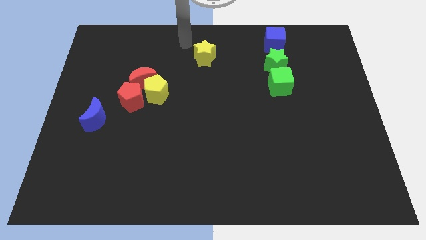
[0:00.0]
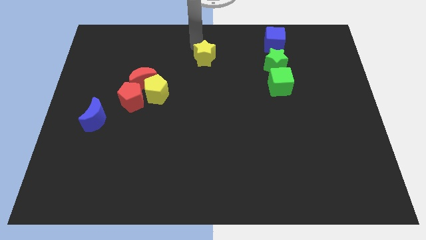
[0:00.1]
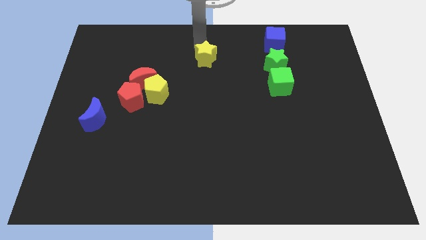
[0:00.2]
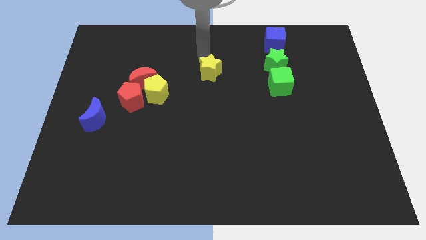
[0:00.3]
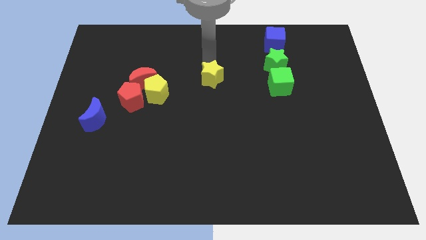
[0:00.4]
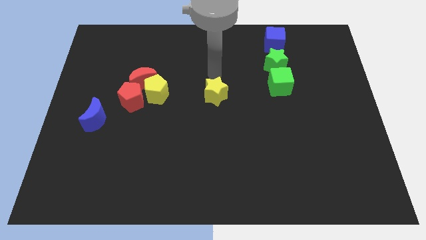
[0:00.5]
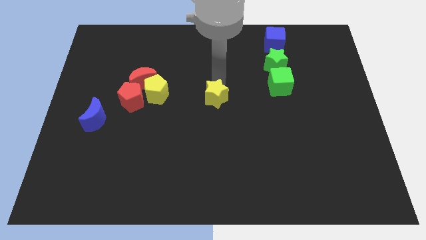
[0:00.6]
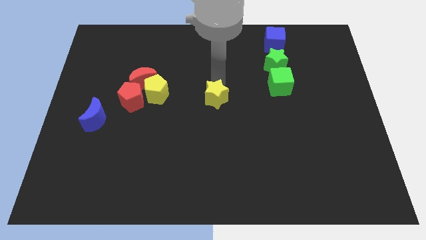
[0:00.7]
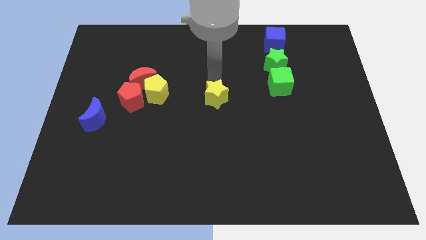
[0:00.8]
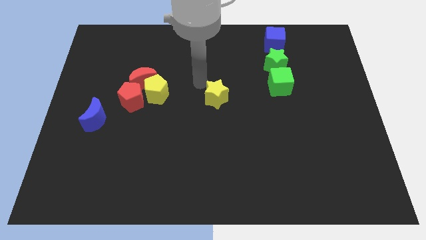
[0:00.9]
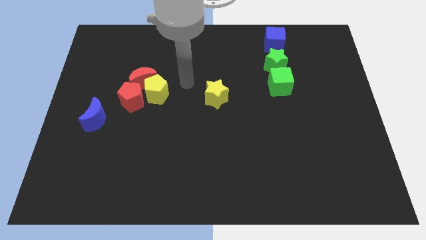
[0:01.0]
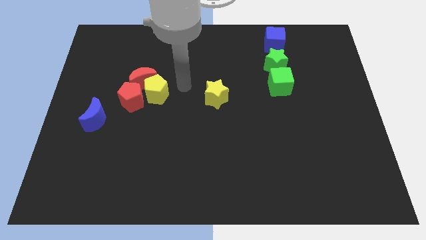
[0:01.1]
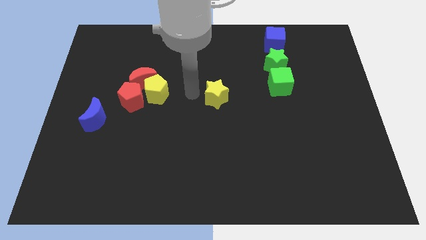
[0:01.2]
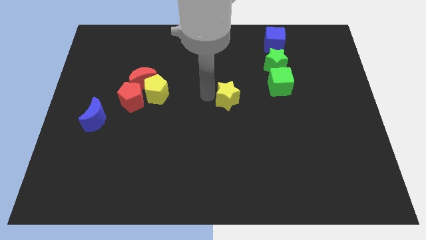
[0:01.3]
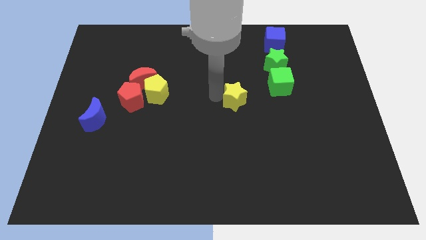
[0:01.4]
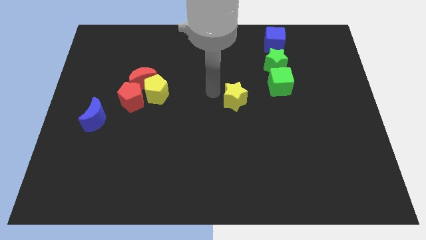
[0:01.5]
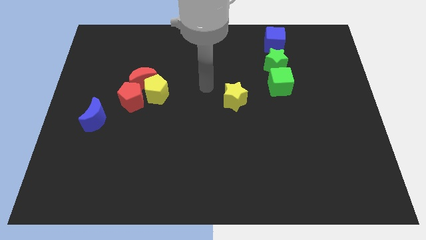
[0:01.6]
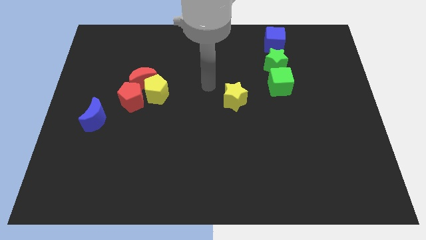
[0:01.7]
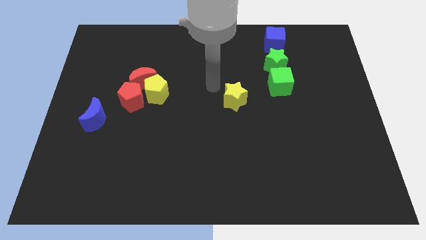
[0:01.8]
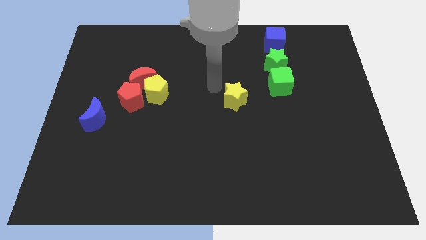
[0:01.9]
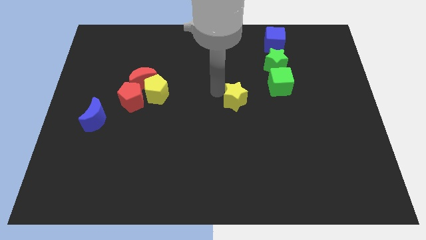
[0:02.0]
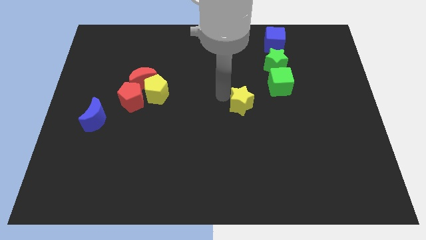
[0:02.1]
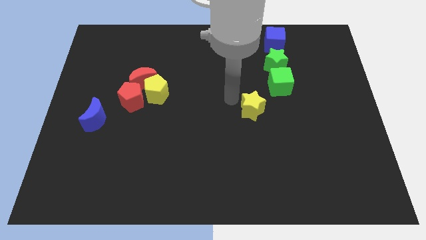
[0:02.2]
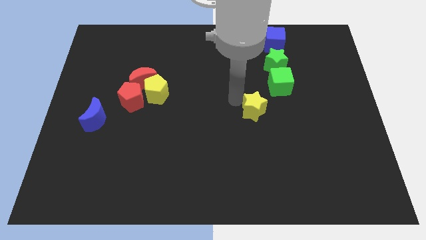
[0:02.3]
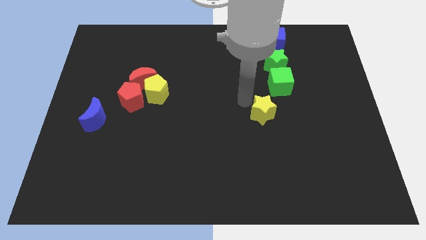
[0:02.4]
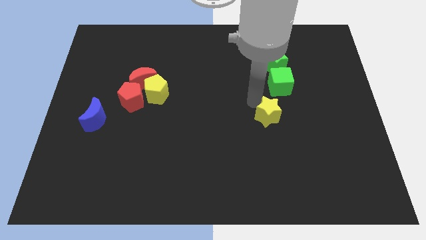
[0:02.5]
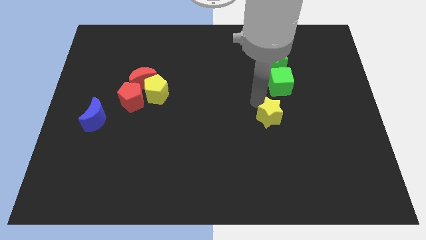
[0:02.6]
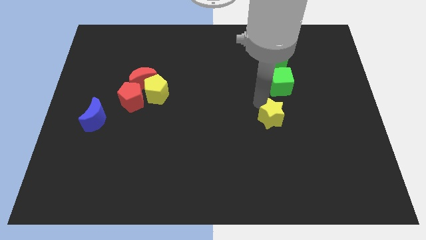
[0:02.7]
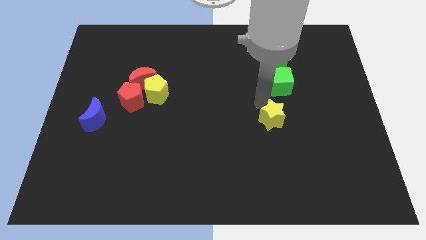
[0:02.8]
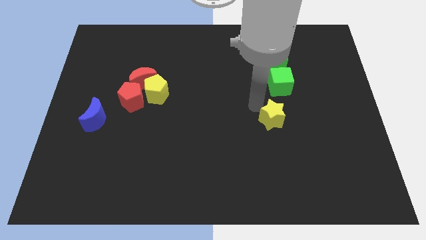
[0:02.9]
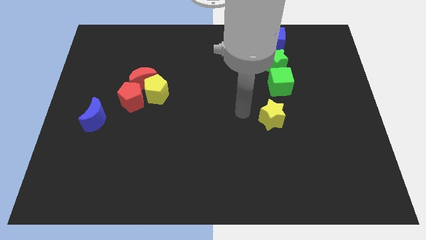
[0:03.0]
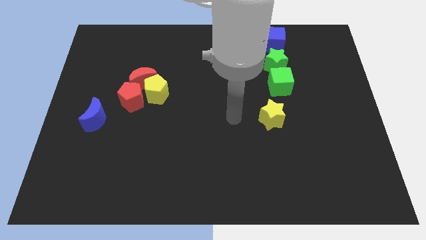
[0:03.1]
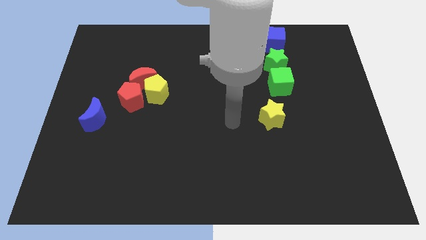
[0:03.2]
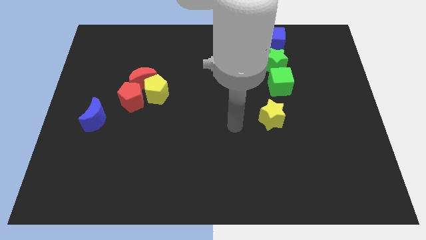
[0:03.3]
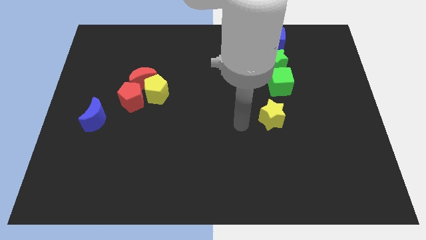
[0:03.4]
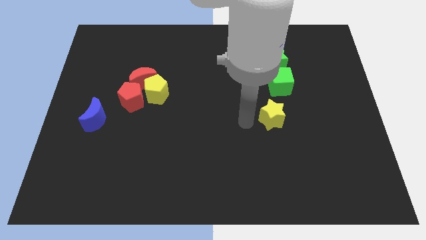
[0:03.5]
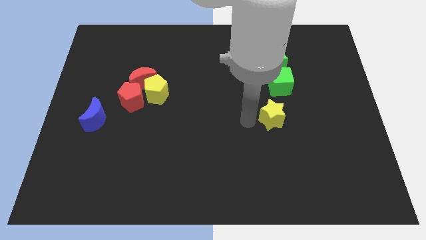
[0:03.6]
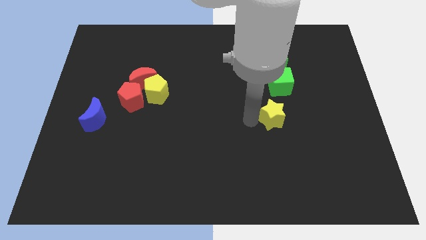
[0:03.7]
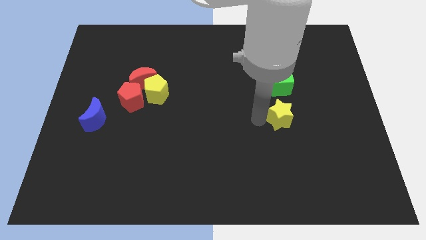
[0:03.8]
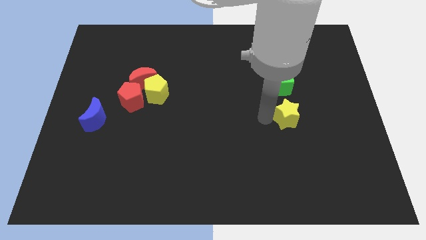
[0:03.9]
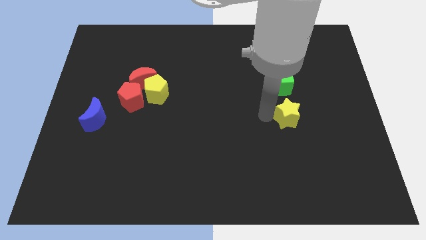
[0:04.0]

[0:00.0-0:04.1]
push yellow star below the green cube

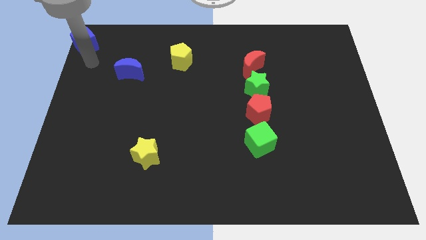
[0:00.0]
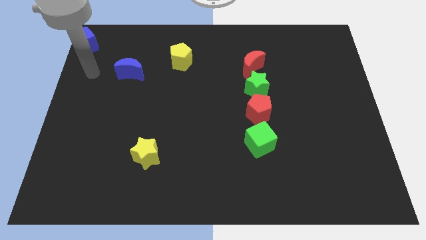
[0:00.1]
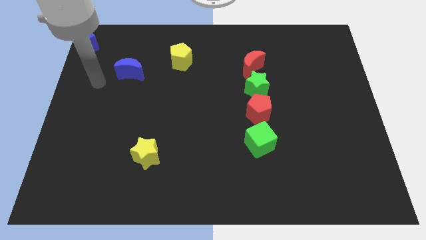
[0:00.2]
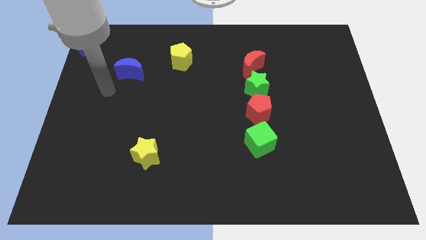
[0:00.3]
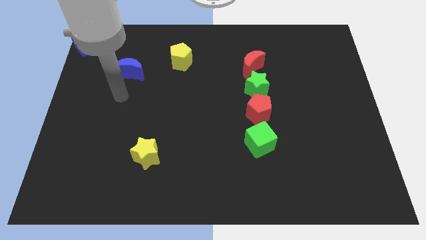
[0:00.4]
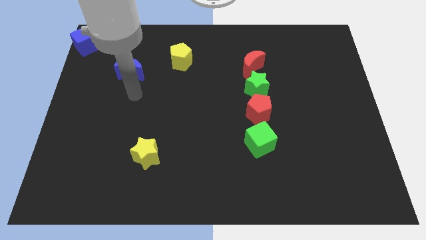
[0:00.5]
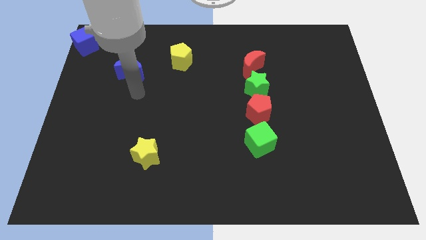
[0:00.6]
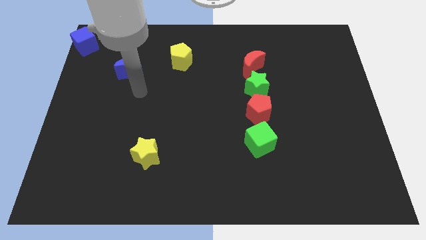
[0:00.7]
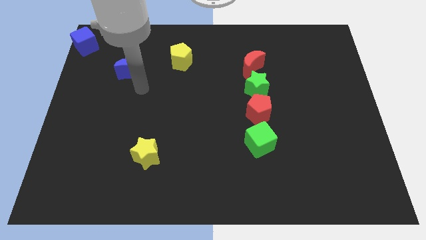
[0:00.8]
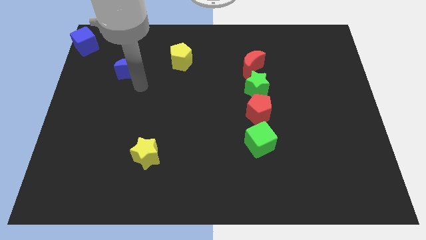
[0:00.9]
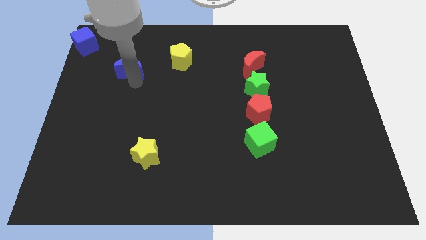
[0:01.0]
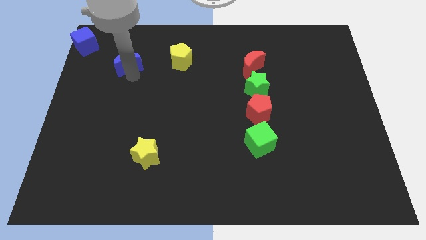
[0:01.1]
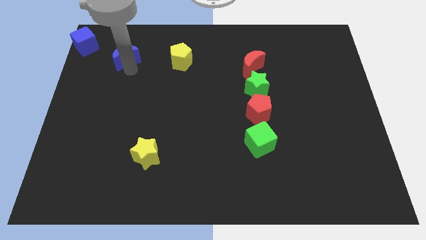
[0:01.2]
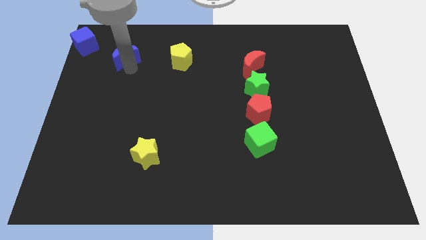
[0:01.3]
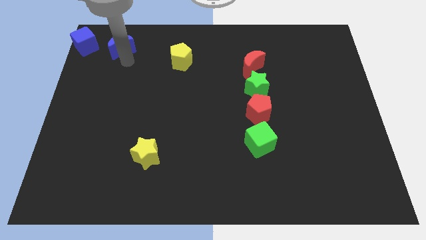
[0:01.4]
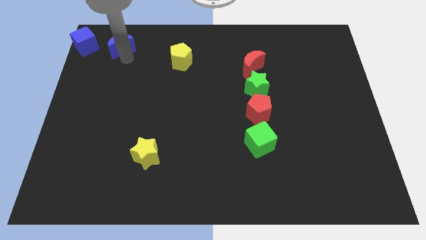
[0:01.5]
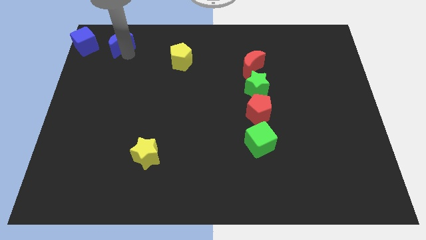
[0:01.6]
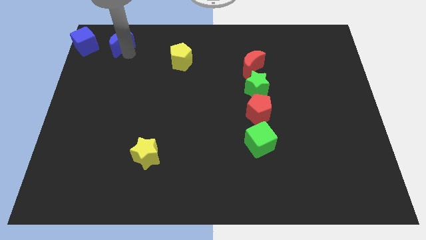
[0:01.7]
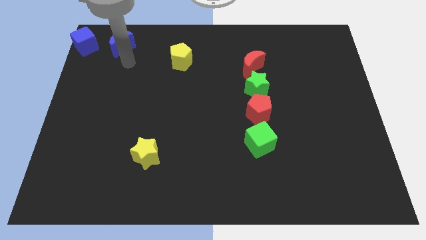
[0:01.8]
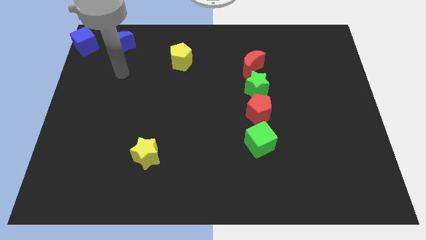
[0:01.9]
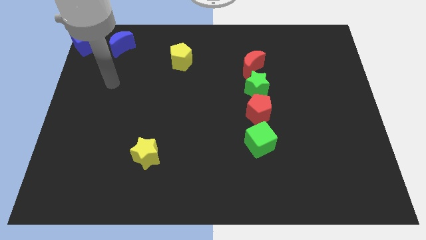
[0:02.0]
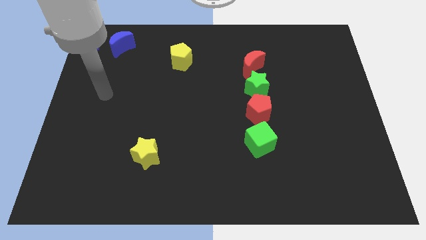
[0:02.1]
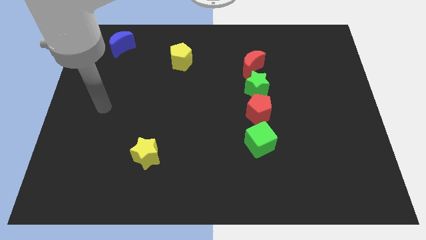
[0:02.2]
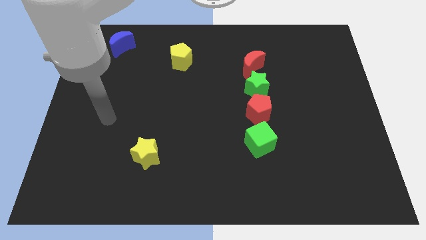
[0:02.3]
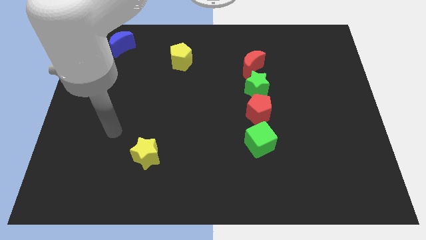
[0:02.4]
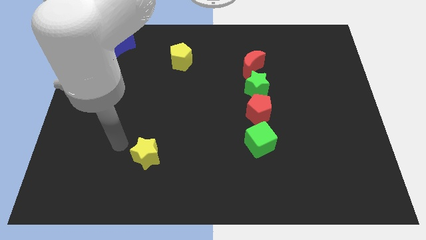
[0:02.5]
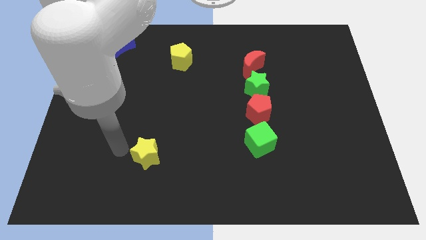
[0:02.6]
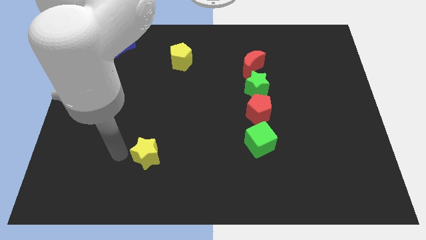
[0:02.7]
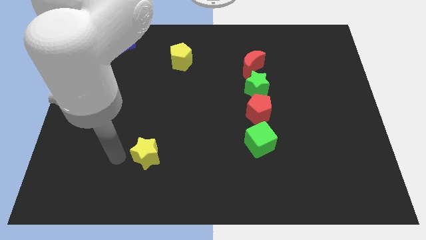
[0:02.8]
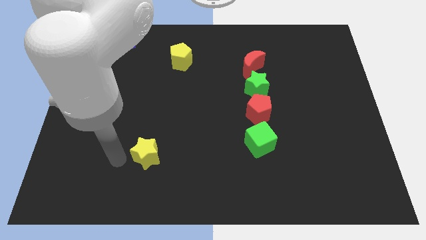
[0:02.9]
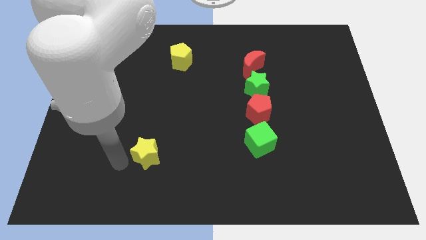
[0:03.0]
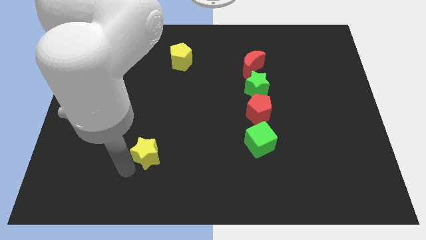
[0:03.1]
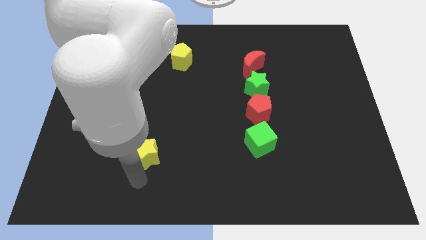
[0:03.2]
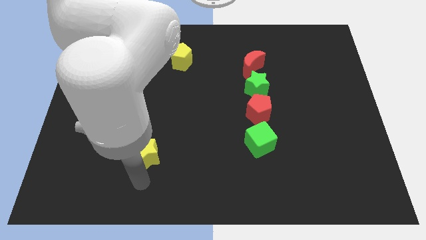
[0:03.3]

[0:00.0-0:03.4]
place the blue moon in between the blue cube and yellow pentagon

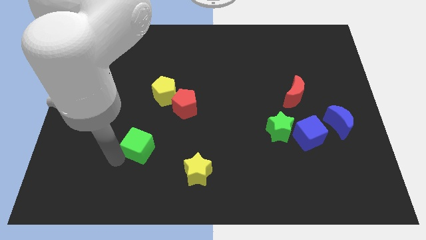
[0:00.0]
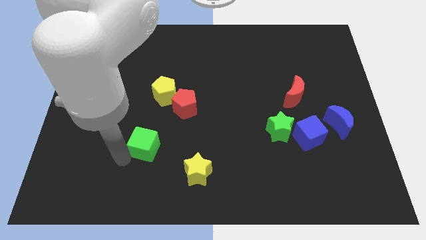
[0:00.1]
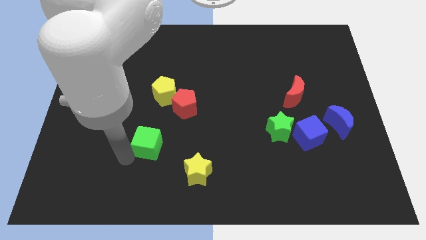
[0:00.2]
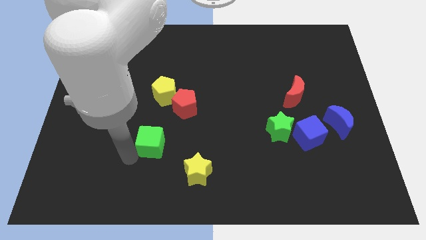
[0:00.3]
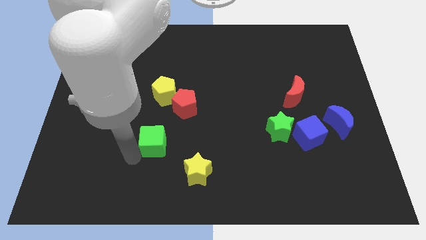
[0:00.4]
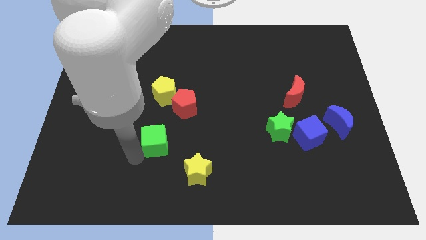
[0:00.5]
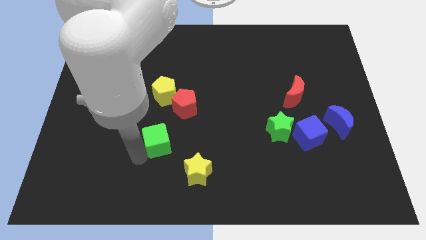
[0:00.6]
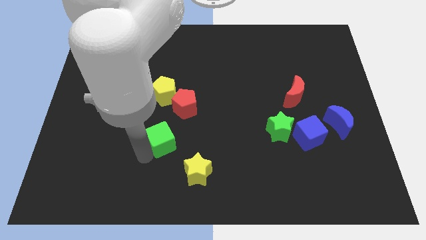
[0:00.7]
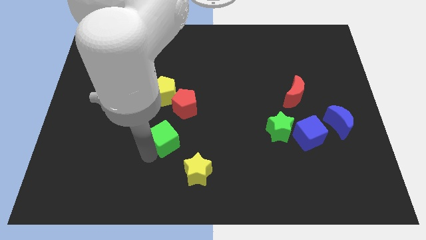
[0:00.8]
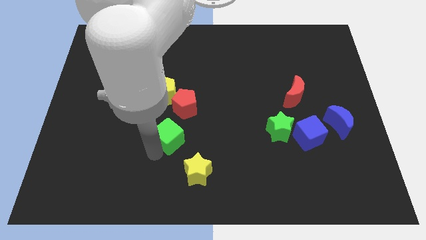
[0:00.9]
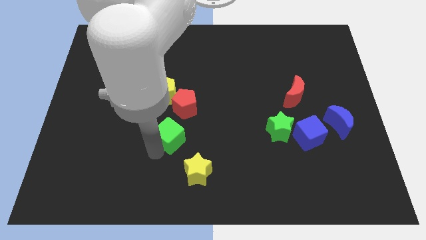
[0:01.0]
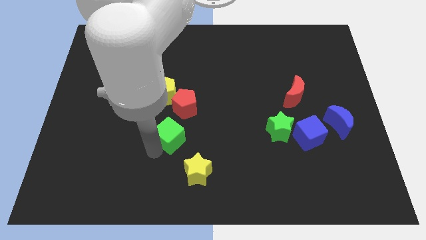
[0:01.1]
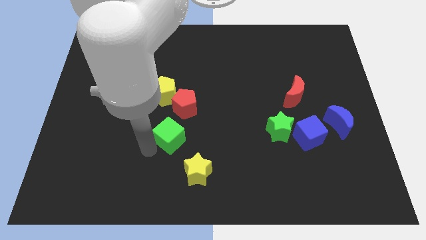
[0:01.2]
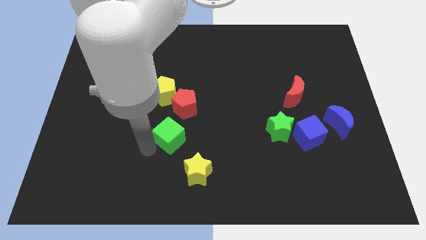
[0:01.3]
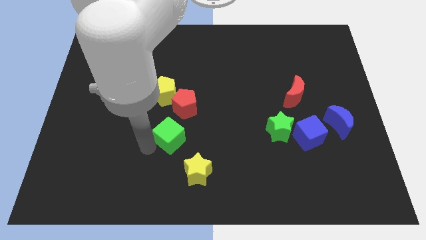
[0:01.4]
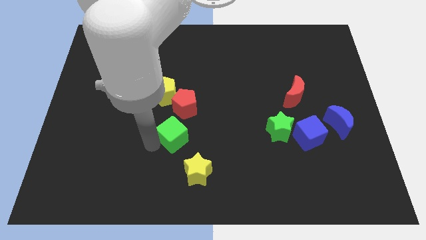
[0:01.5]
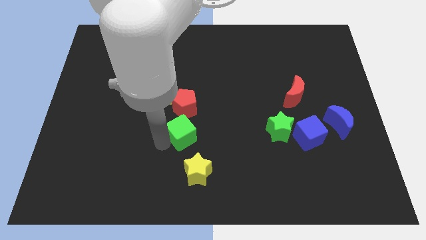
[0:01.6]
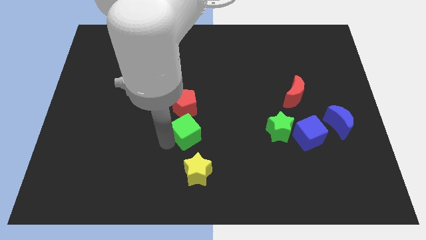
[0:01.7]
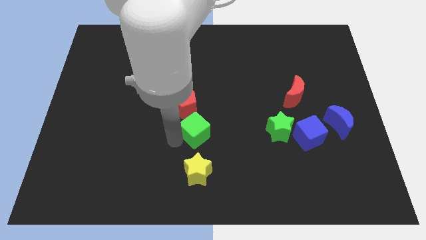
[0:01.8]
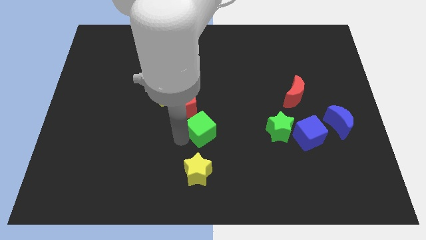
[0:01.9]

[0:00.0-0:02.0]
place the green cube below the red pentagon
